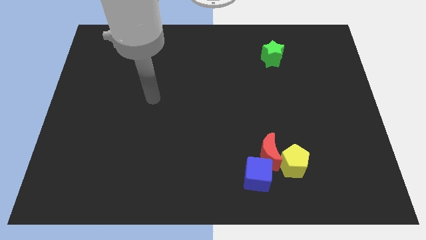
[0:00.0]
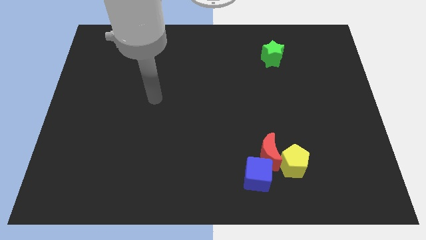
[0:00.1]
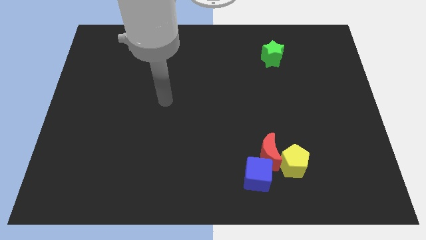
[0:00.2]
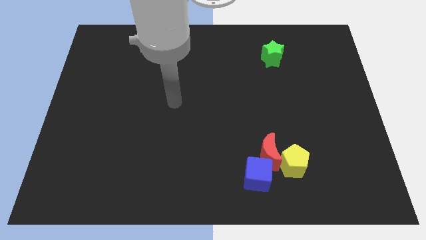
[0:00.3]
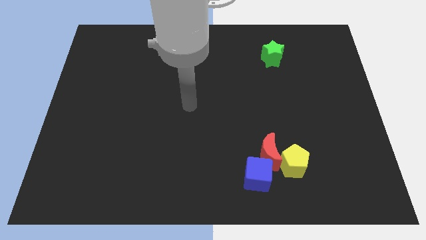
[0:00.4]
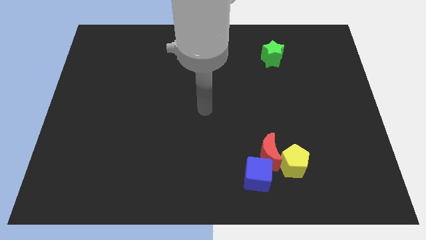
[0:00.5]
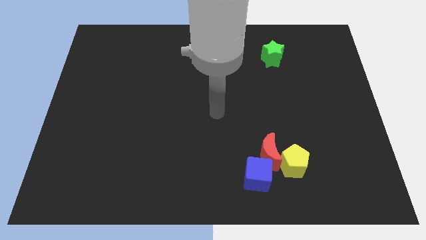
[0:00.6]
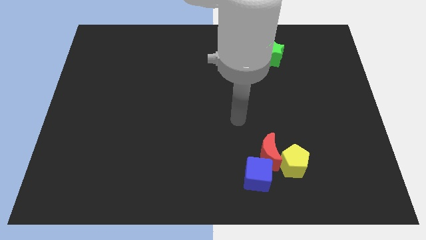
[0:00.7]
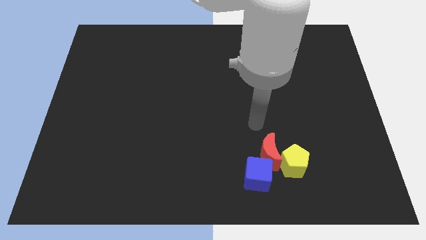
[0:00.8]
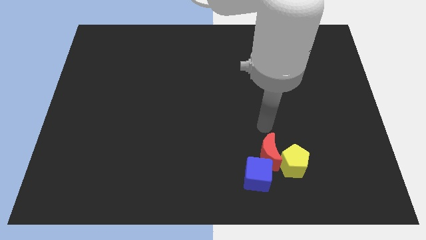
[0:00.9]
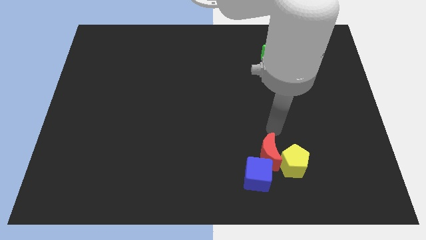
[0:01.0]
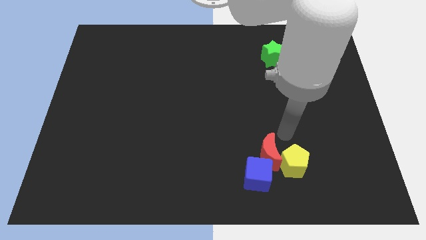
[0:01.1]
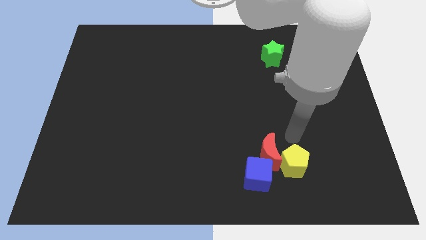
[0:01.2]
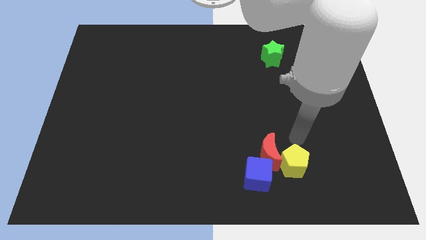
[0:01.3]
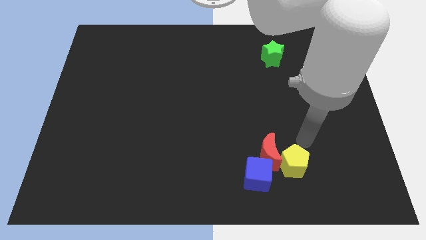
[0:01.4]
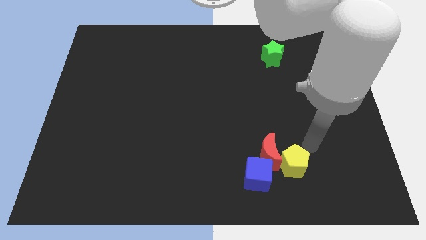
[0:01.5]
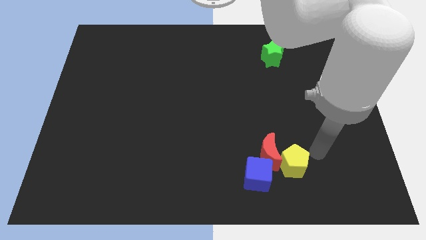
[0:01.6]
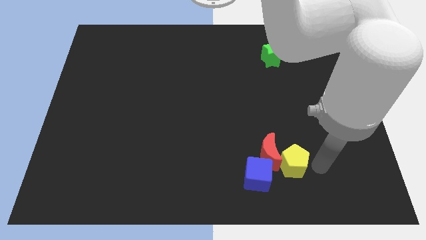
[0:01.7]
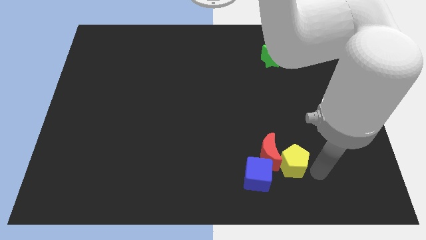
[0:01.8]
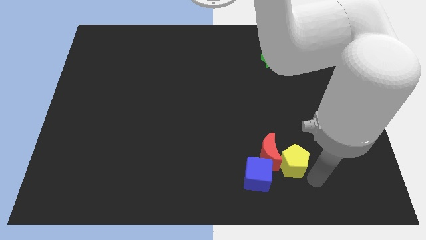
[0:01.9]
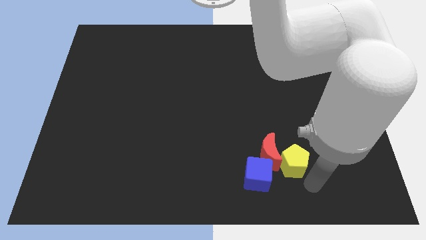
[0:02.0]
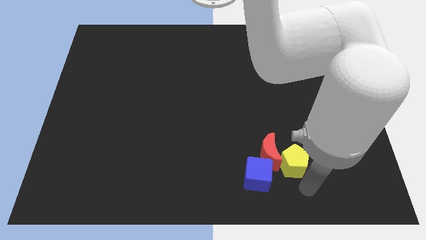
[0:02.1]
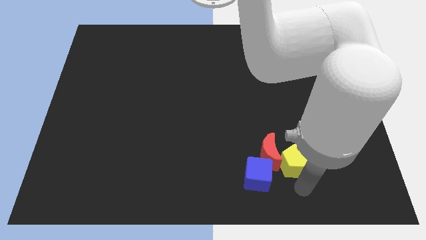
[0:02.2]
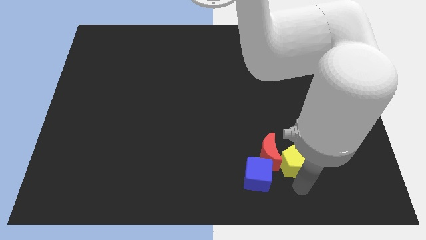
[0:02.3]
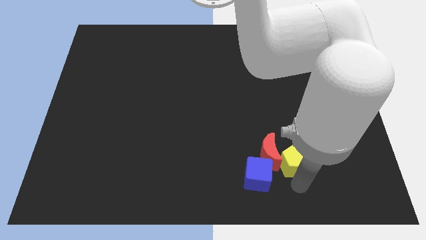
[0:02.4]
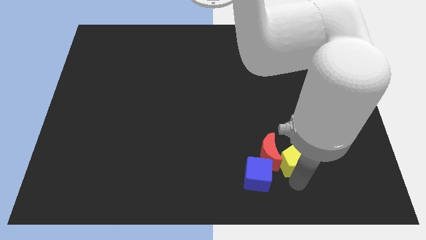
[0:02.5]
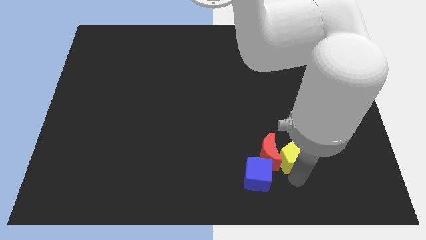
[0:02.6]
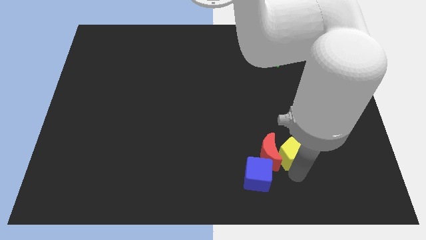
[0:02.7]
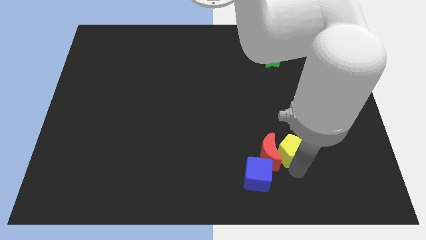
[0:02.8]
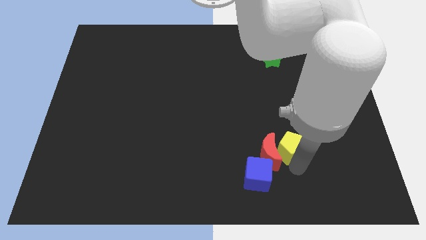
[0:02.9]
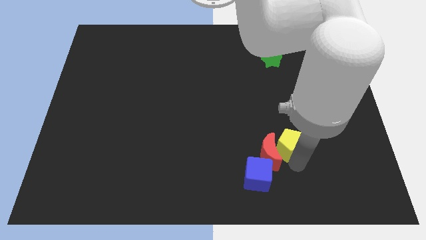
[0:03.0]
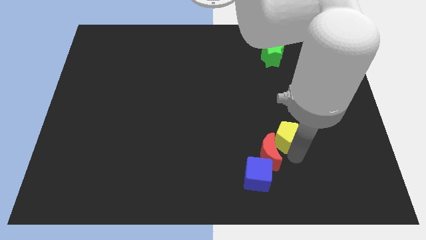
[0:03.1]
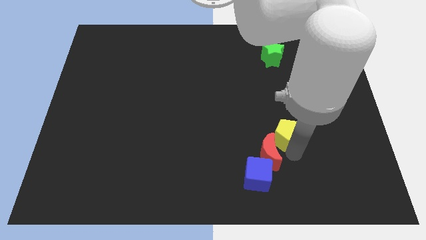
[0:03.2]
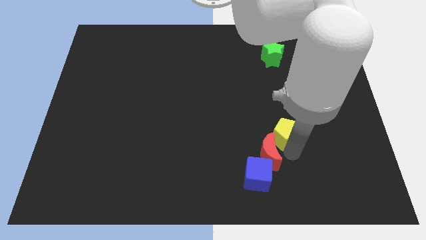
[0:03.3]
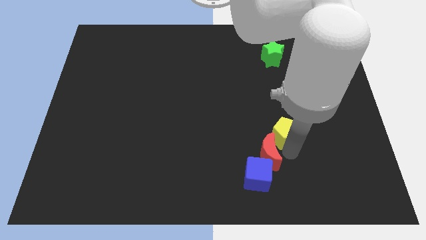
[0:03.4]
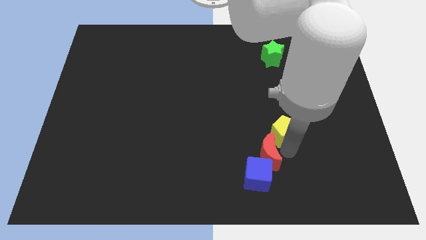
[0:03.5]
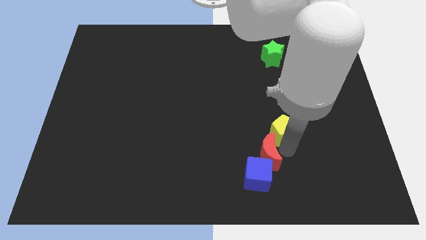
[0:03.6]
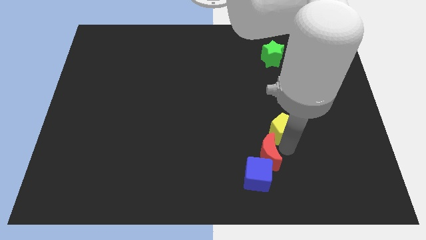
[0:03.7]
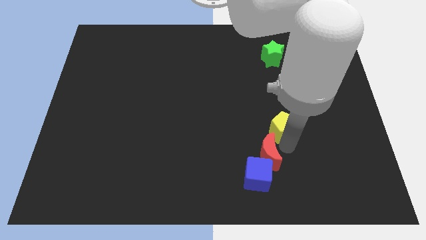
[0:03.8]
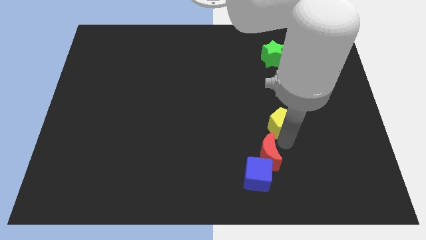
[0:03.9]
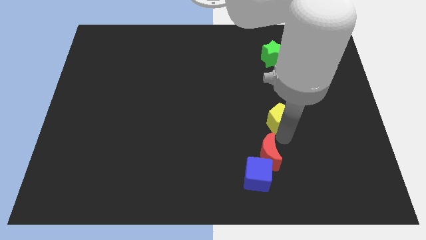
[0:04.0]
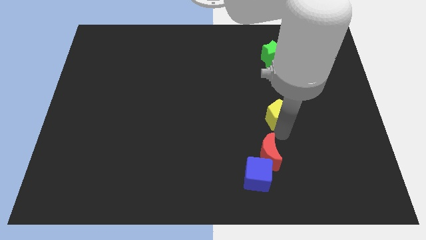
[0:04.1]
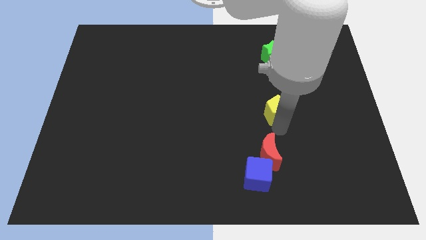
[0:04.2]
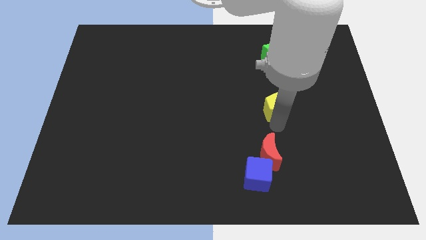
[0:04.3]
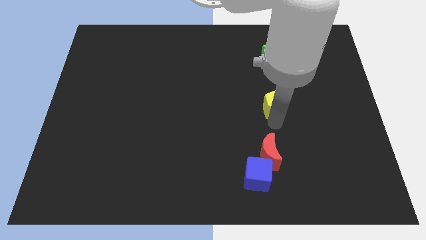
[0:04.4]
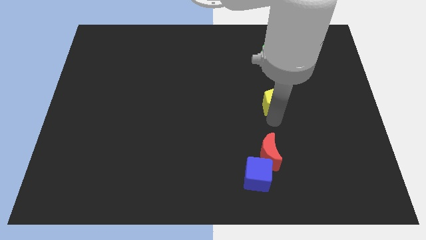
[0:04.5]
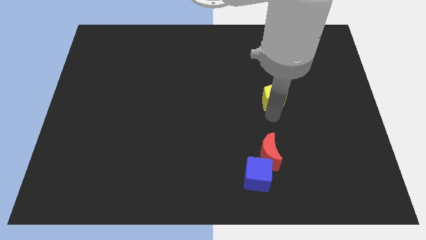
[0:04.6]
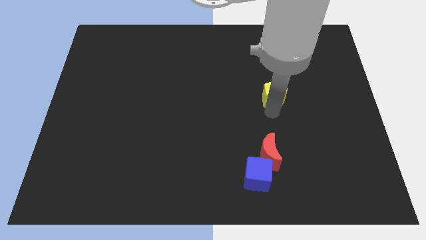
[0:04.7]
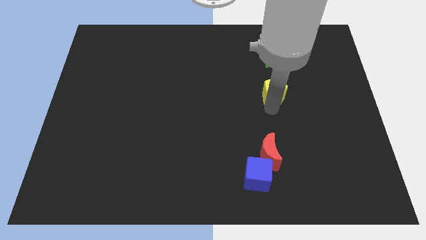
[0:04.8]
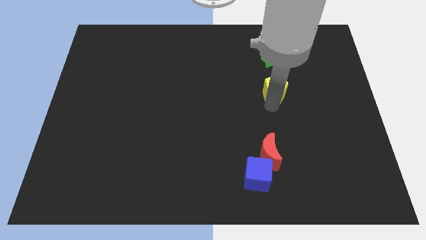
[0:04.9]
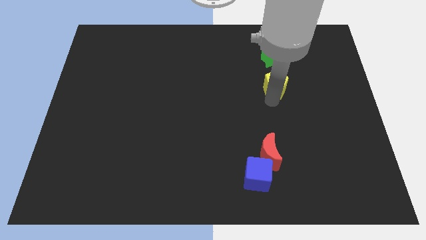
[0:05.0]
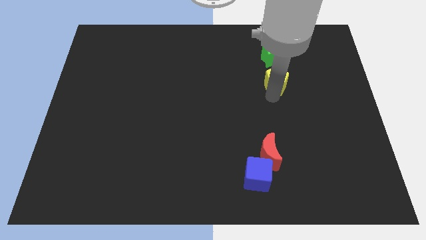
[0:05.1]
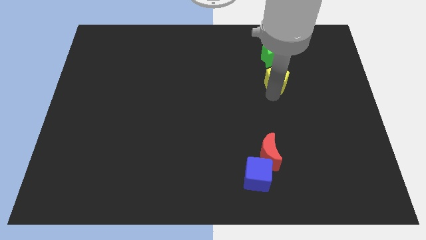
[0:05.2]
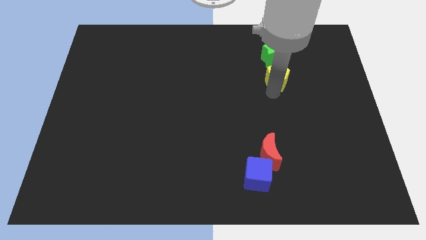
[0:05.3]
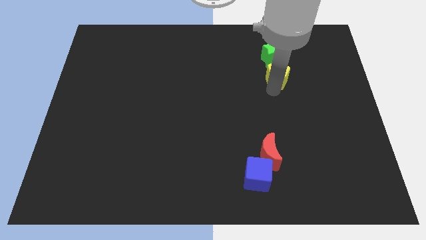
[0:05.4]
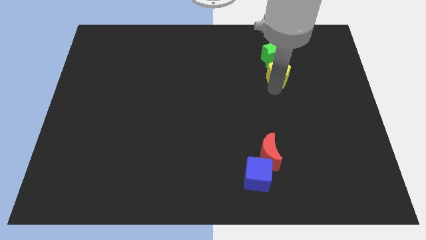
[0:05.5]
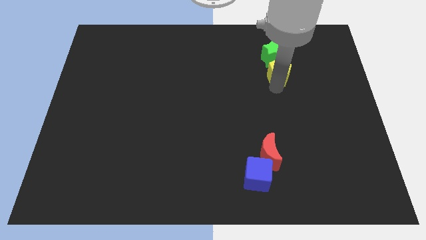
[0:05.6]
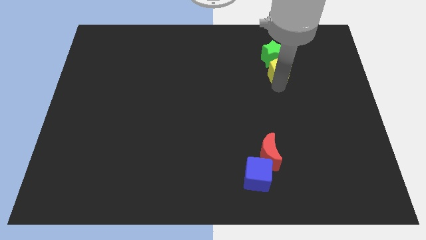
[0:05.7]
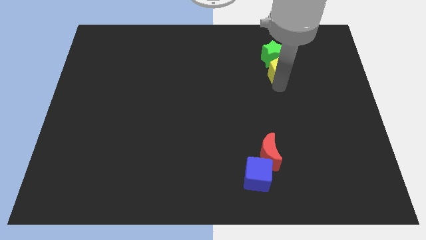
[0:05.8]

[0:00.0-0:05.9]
push the yellow pentagon next to the green block

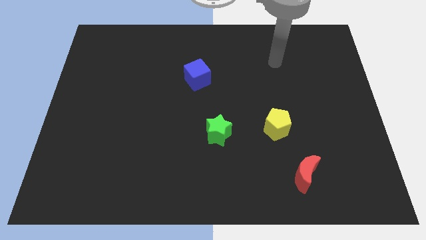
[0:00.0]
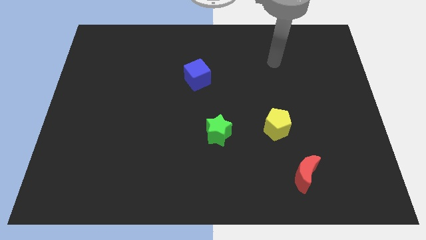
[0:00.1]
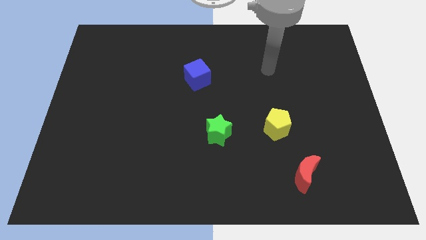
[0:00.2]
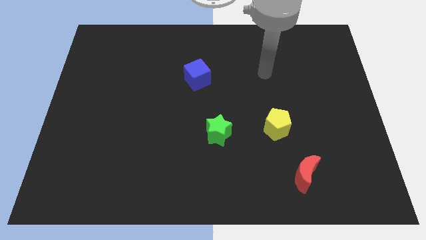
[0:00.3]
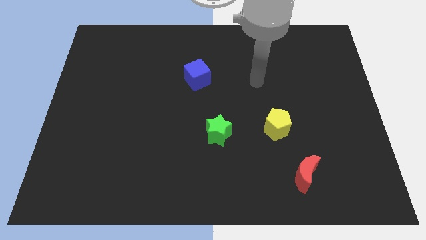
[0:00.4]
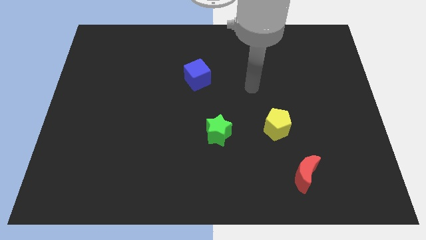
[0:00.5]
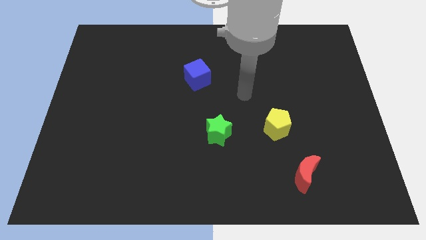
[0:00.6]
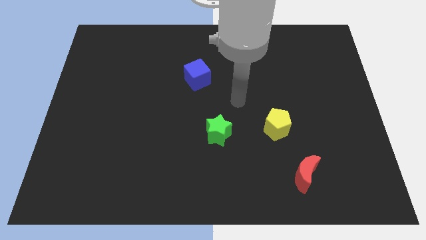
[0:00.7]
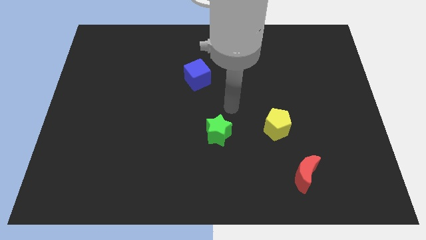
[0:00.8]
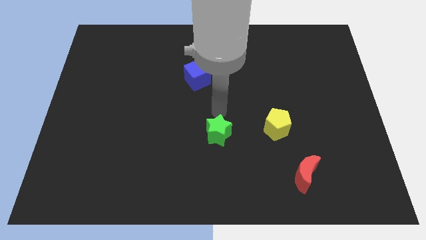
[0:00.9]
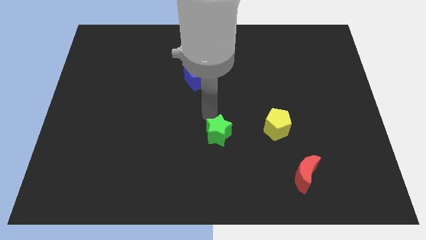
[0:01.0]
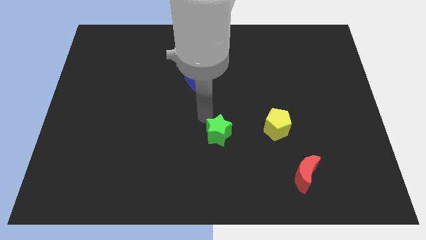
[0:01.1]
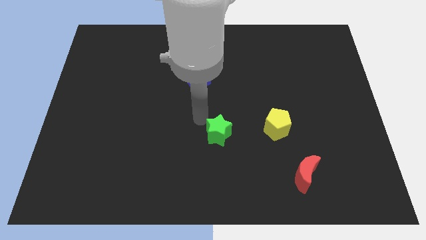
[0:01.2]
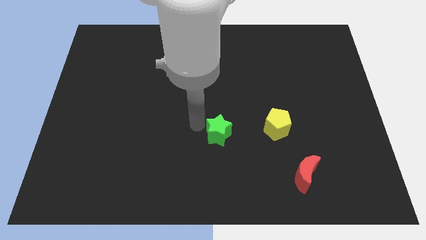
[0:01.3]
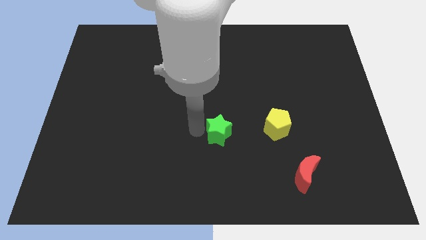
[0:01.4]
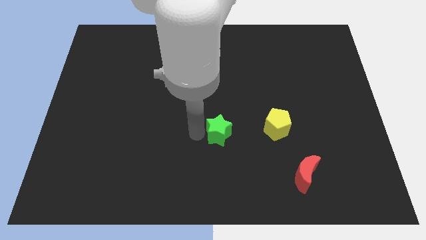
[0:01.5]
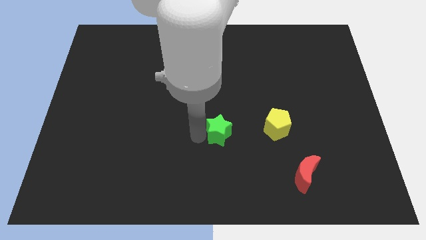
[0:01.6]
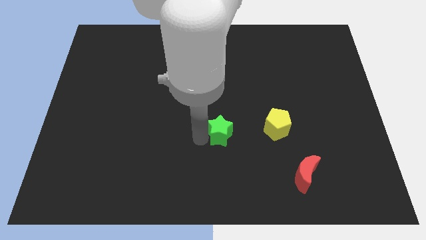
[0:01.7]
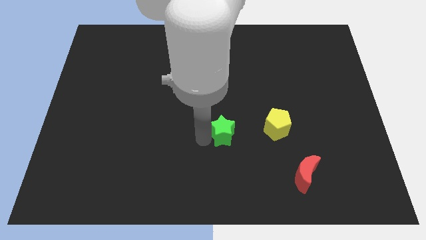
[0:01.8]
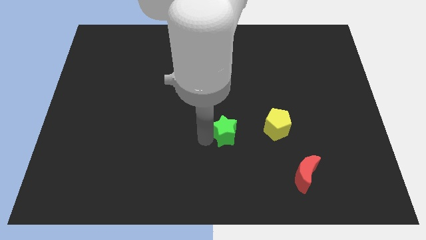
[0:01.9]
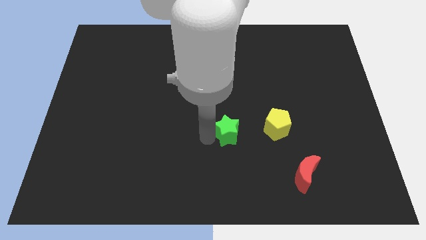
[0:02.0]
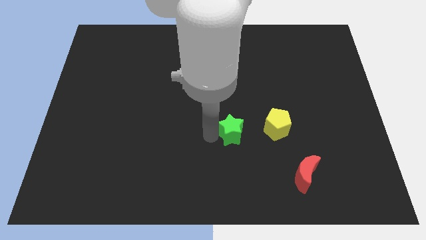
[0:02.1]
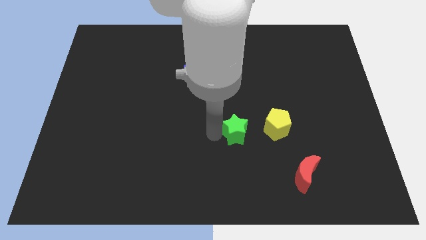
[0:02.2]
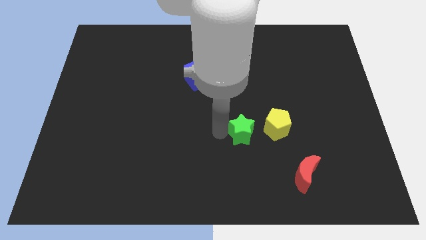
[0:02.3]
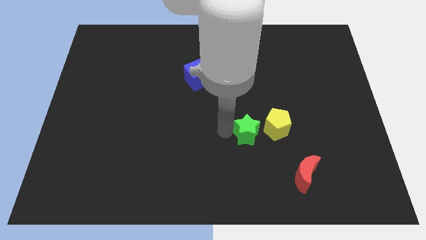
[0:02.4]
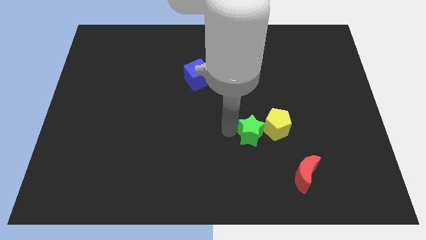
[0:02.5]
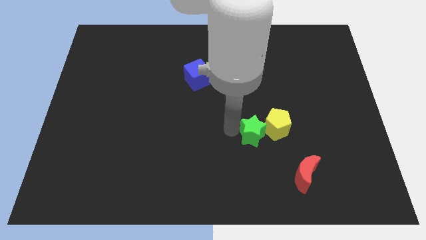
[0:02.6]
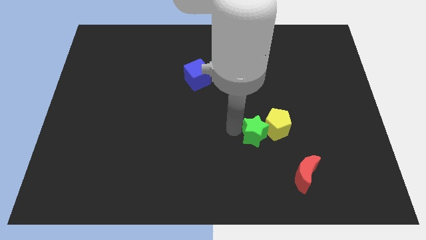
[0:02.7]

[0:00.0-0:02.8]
slide the star close to the pentagon
